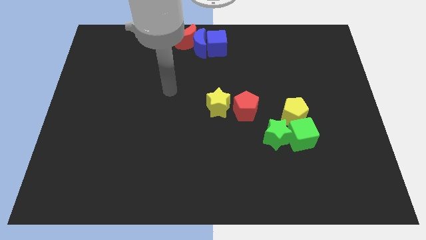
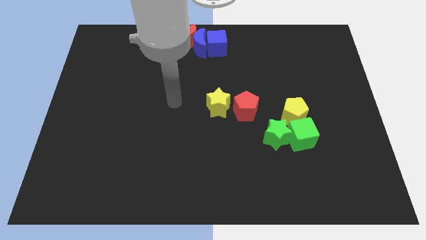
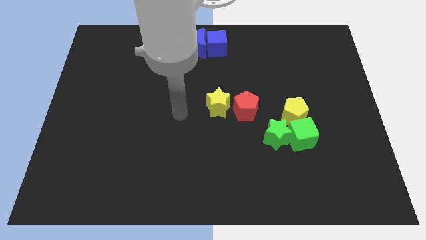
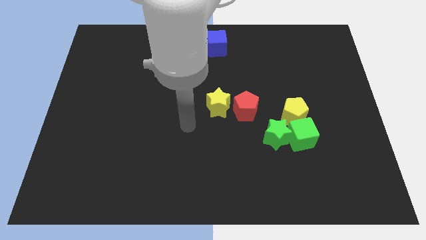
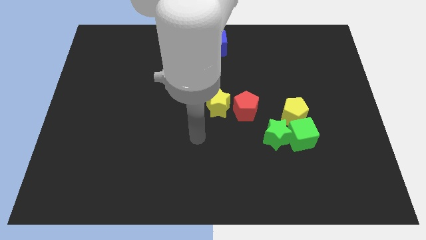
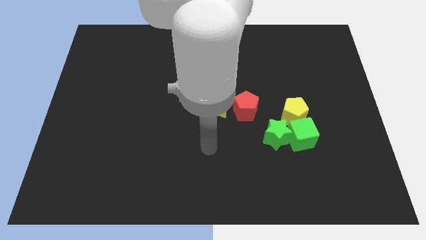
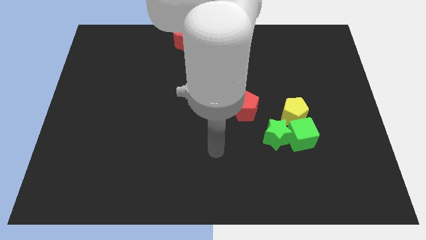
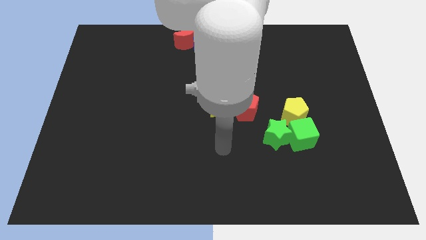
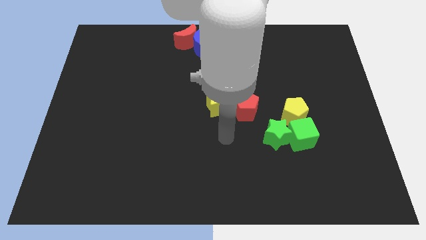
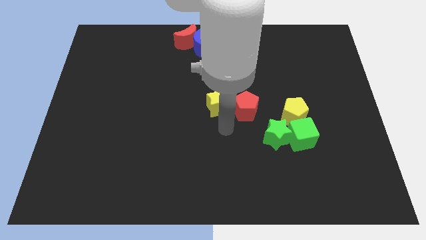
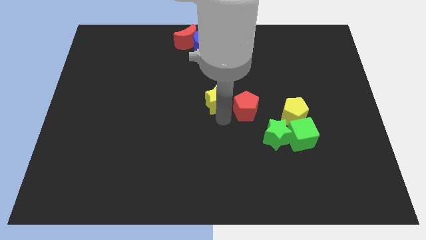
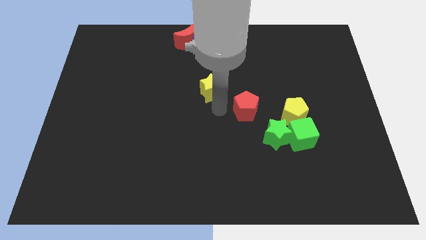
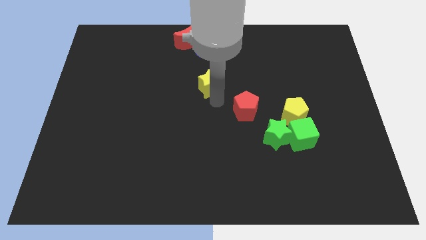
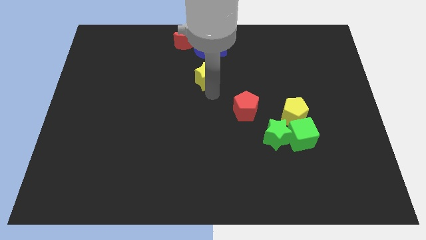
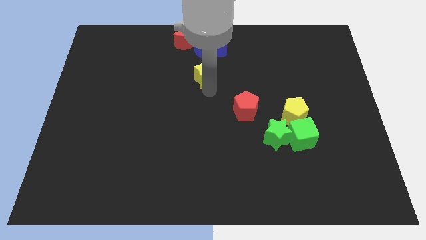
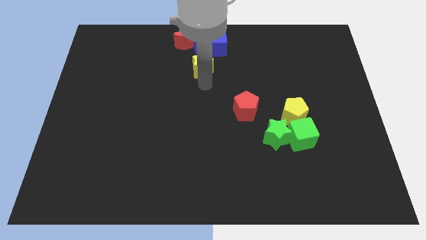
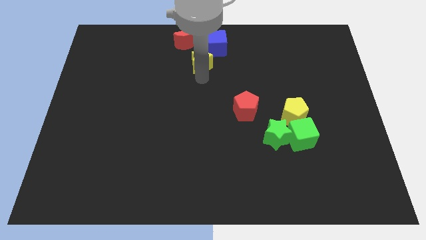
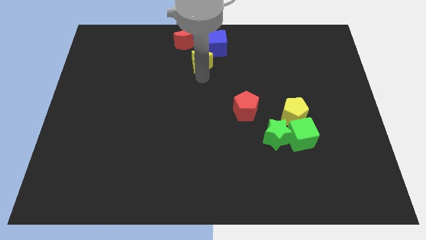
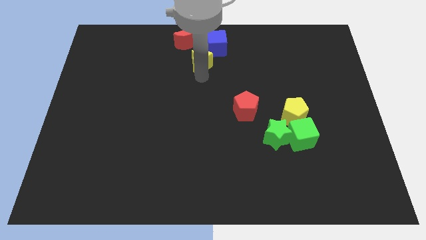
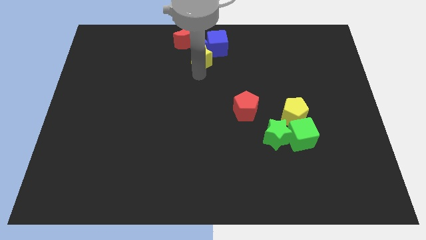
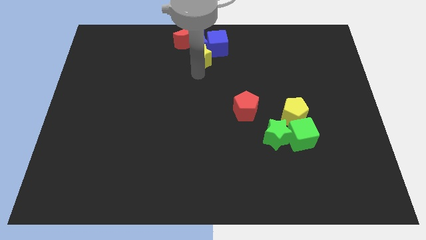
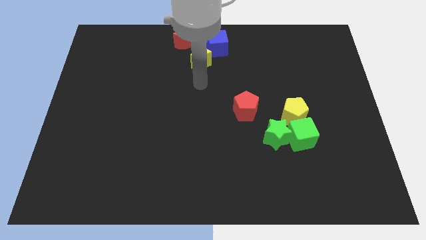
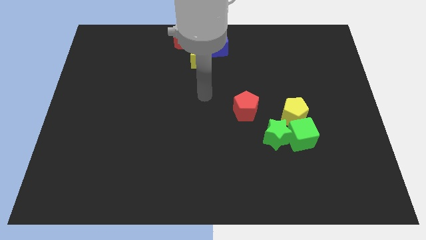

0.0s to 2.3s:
place the yellow star below the blue moon

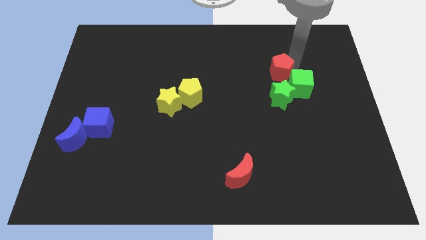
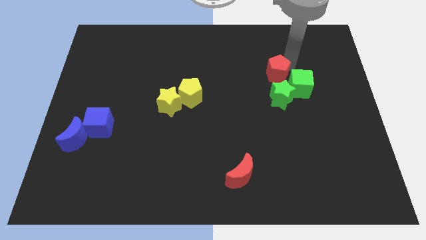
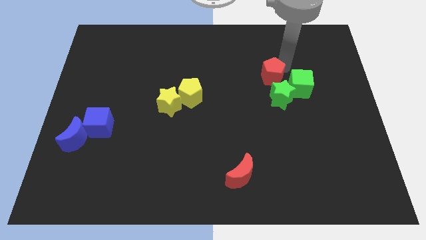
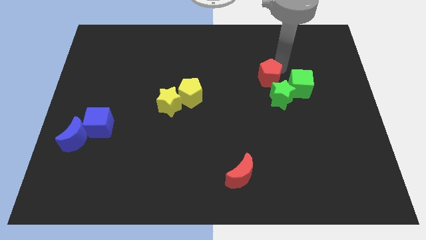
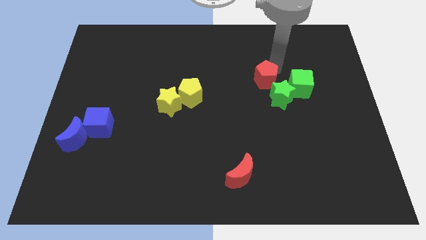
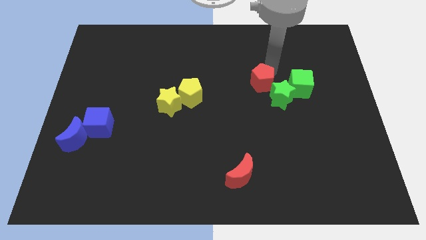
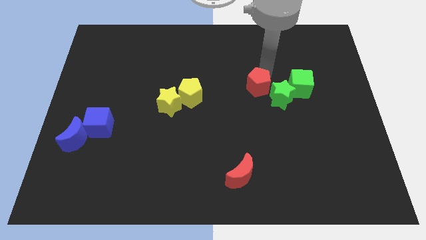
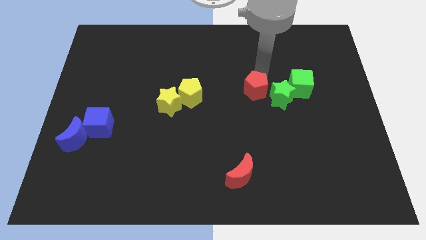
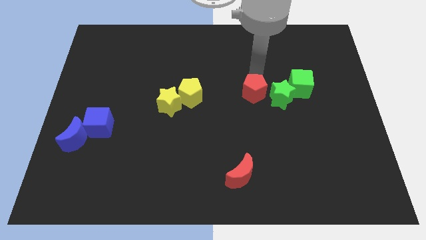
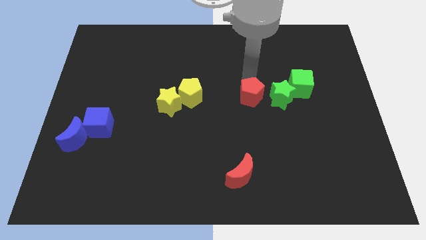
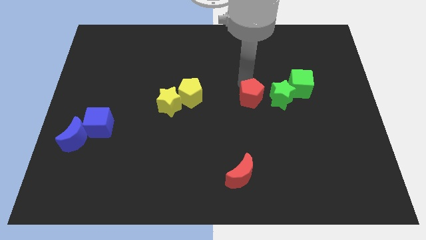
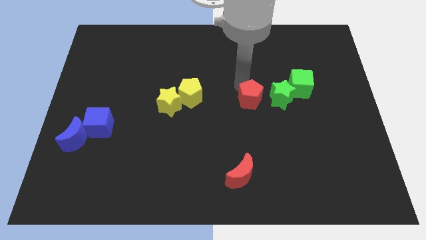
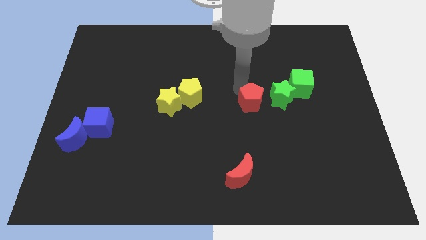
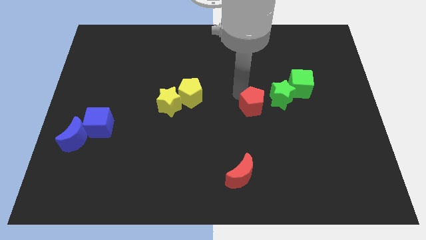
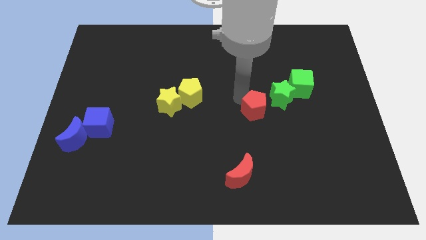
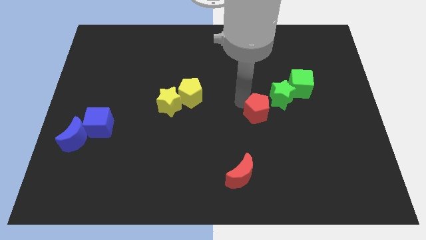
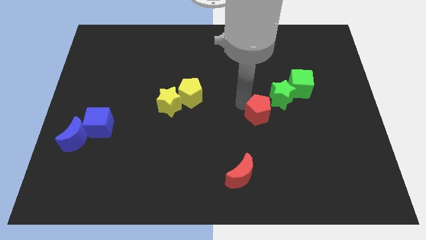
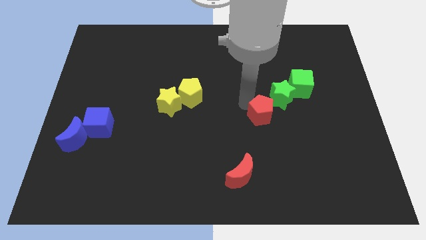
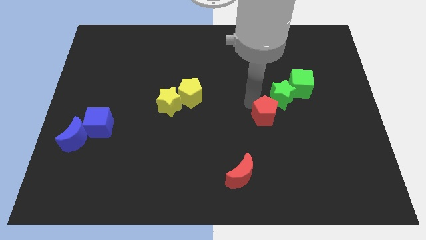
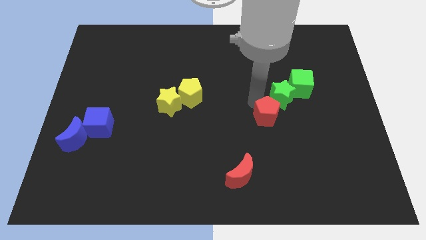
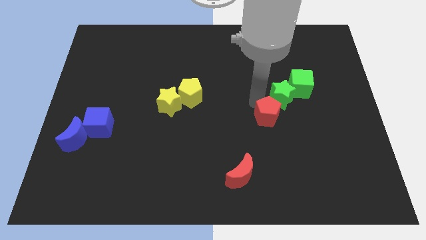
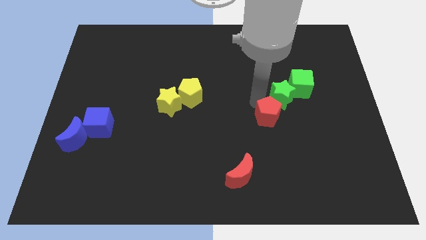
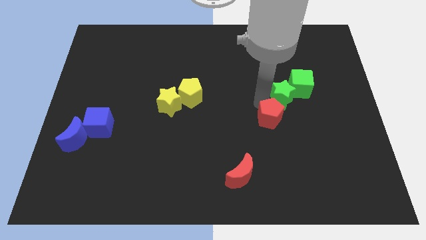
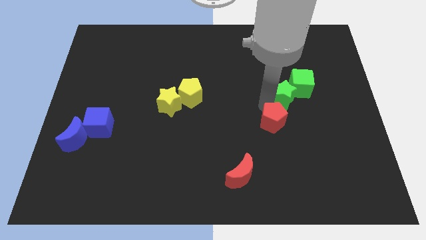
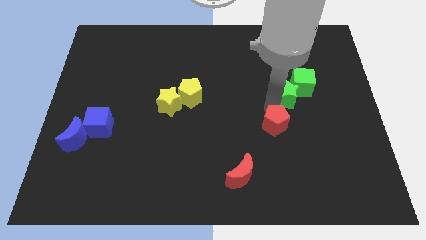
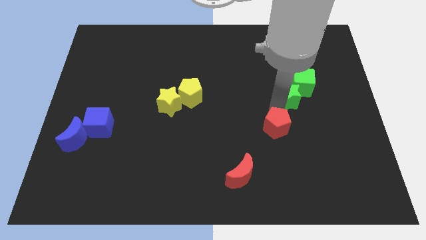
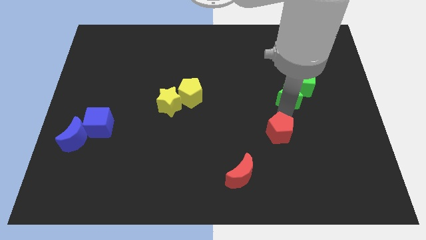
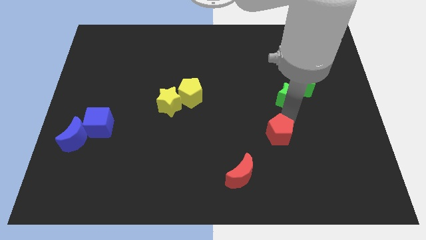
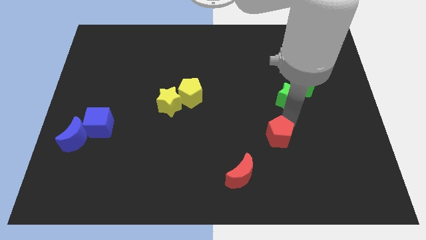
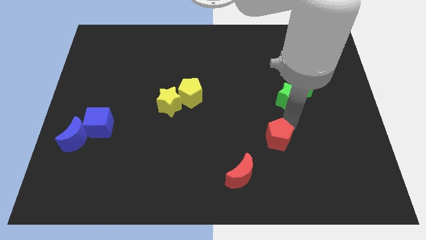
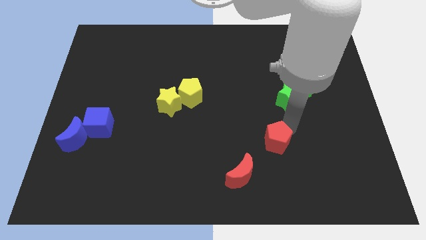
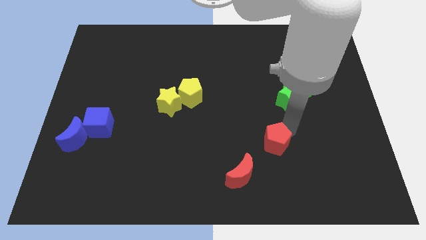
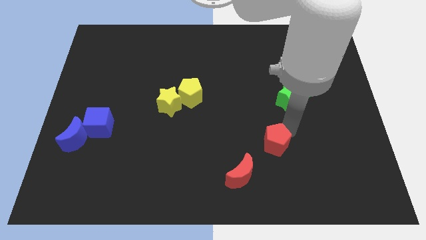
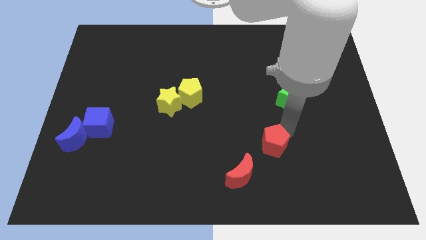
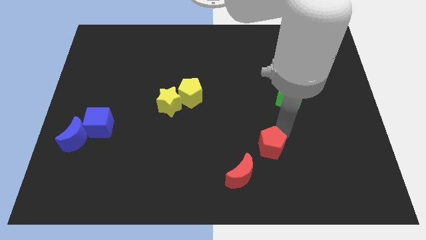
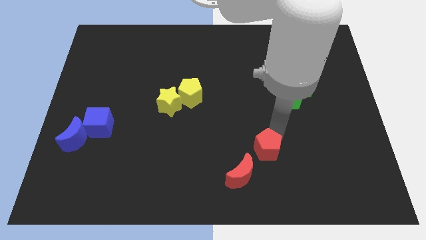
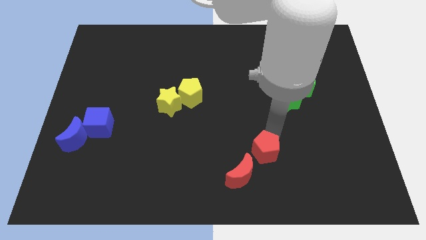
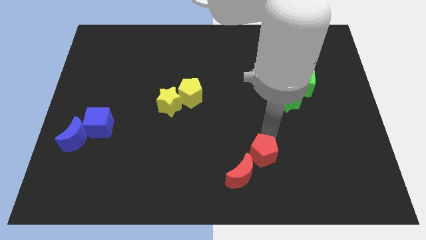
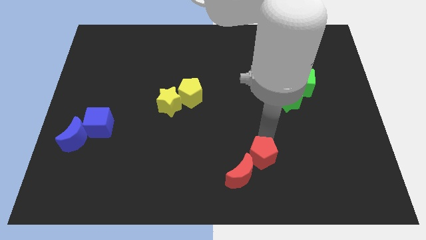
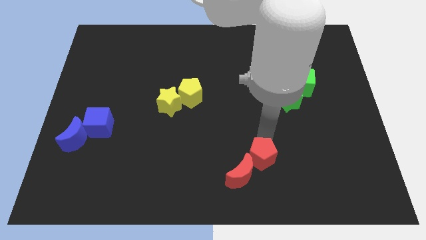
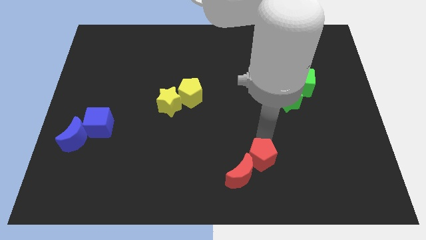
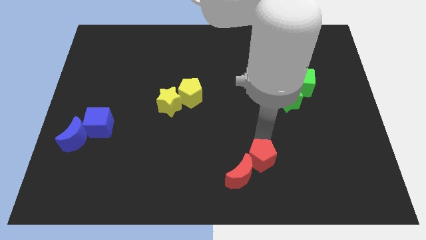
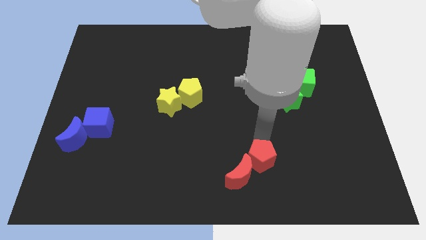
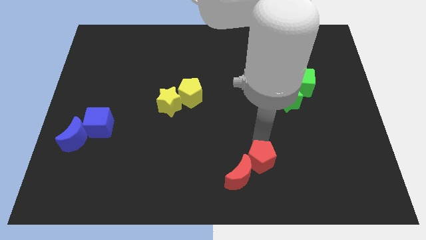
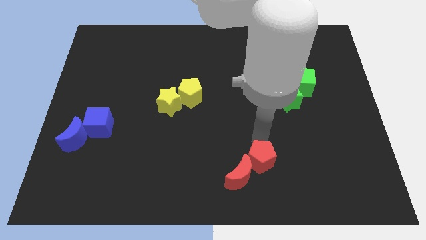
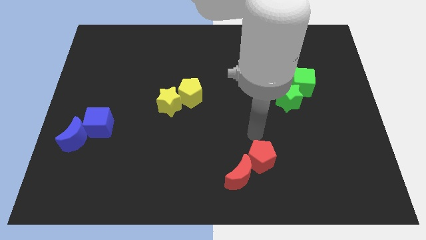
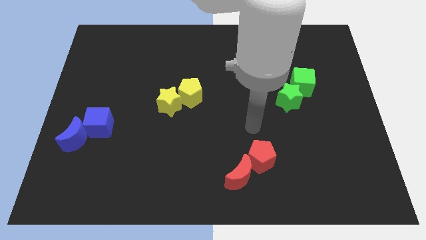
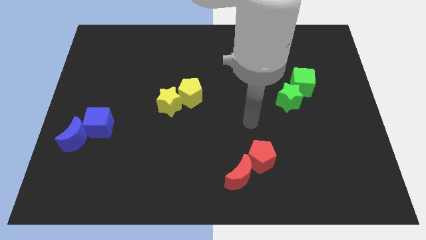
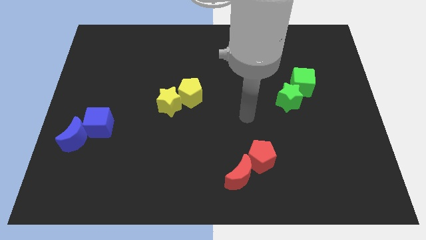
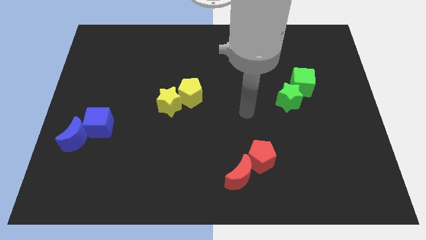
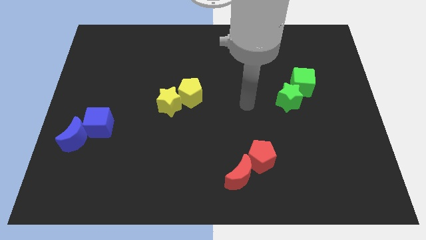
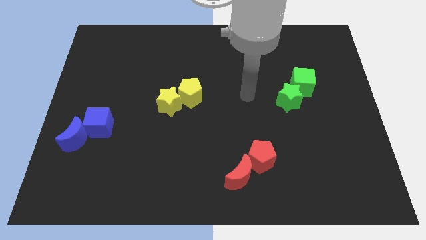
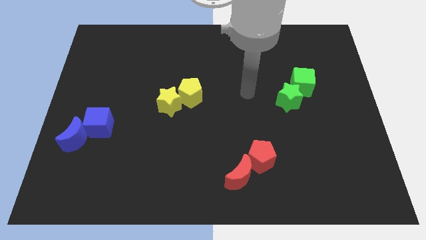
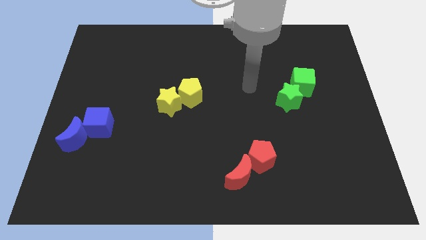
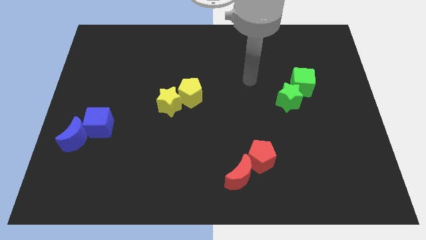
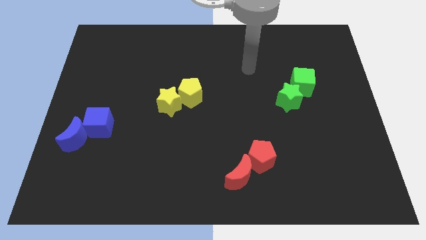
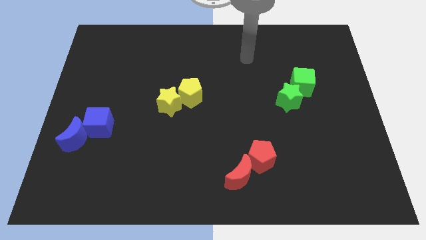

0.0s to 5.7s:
push the red pentagon into the red moon

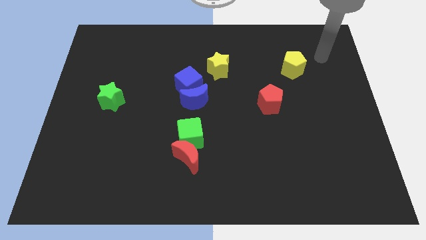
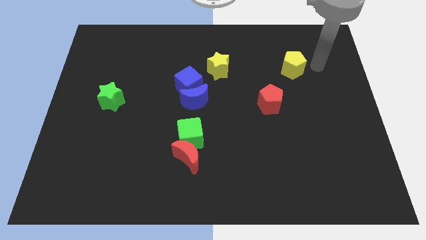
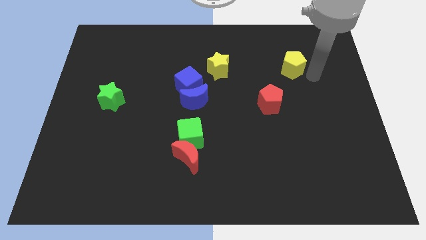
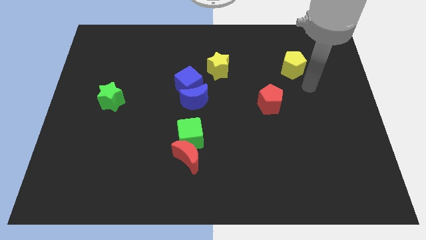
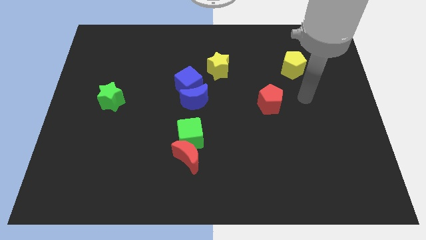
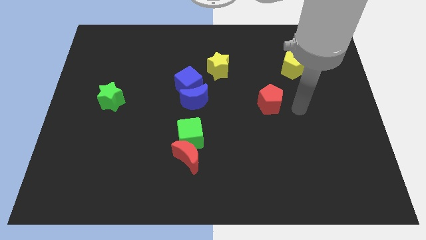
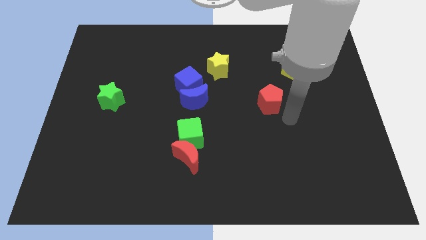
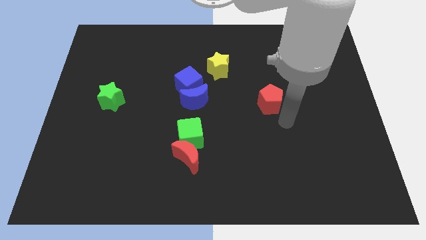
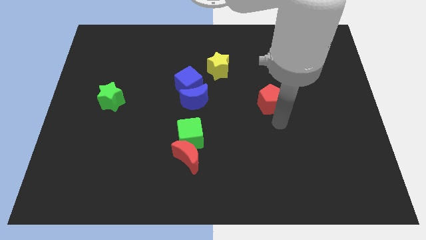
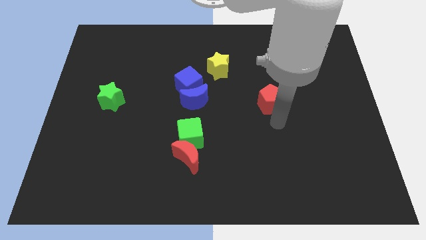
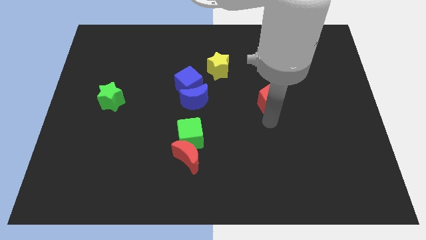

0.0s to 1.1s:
go to the bottom side of the red pentagon
